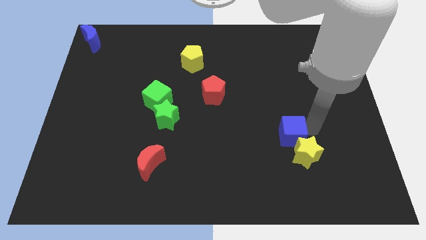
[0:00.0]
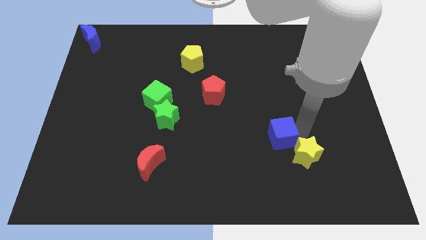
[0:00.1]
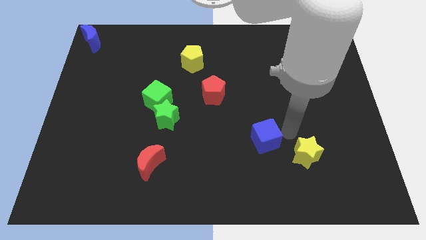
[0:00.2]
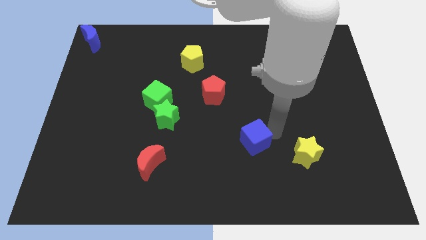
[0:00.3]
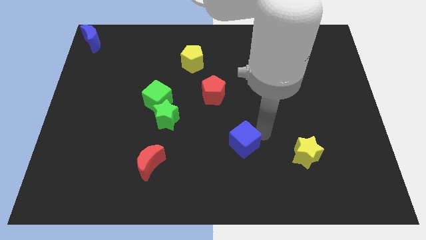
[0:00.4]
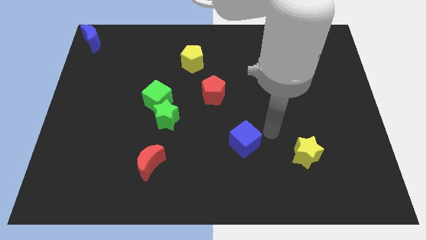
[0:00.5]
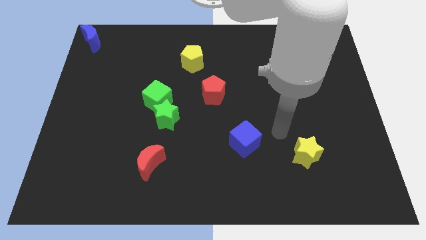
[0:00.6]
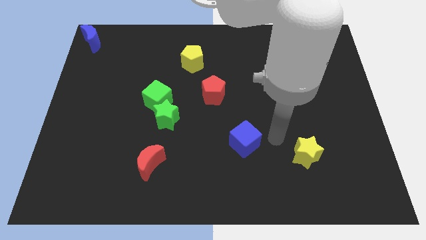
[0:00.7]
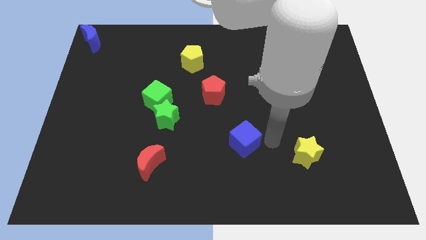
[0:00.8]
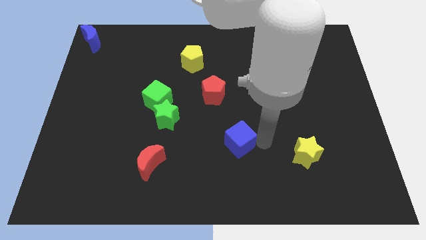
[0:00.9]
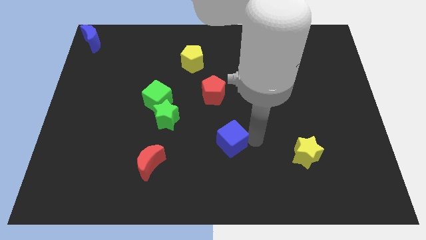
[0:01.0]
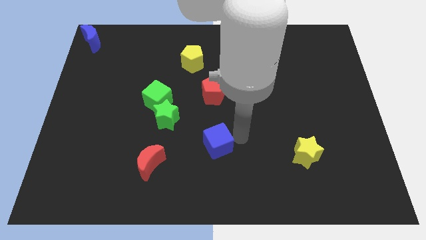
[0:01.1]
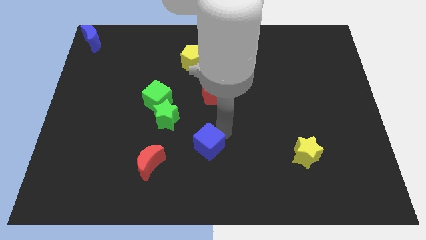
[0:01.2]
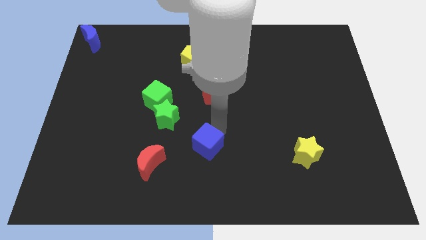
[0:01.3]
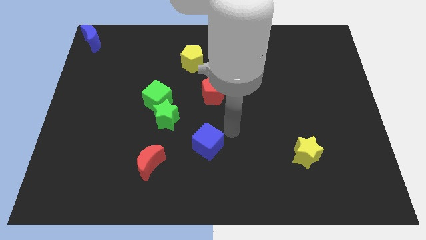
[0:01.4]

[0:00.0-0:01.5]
separate the blue cube from the yellow star

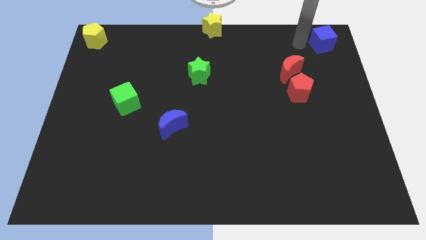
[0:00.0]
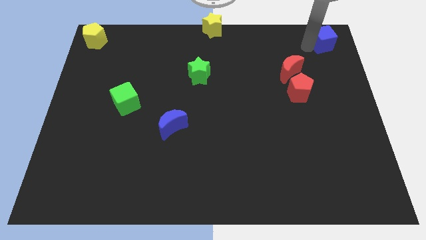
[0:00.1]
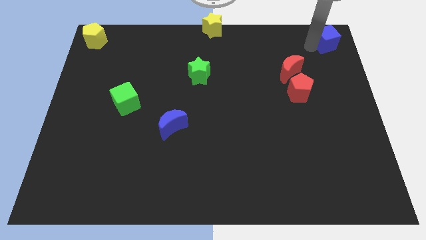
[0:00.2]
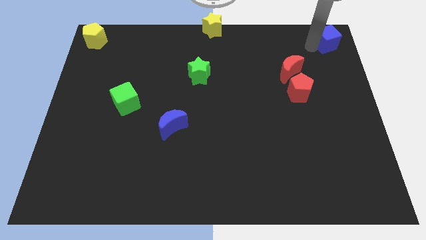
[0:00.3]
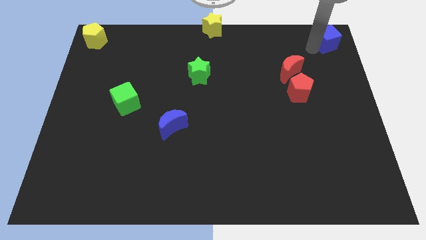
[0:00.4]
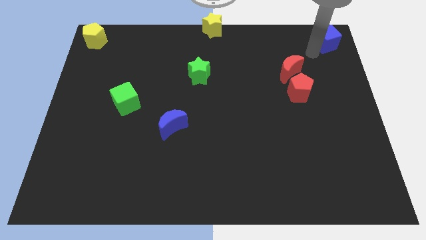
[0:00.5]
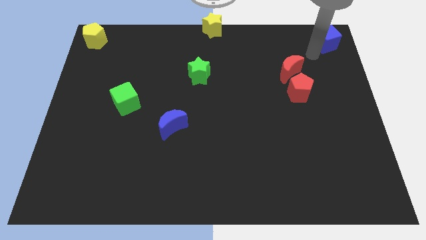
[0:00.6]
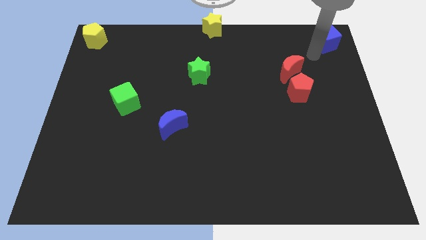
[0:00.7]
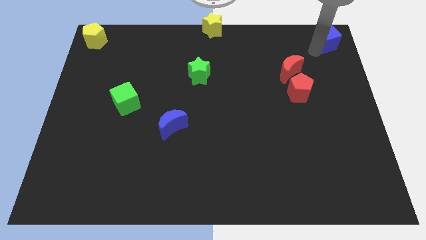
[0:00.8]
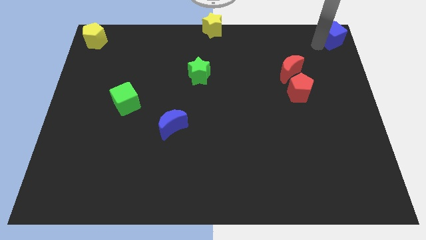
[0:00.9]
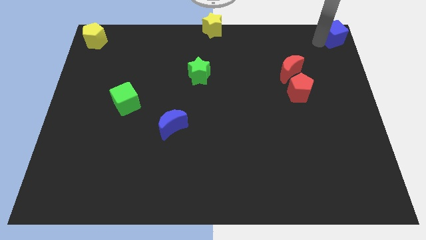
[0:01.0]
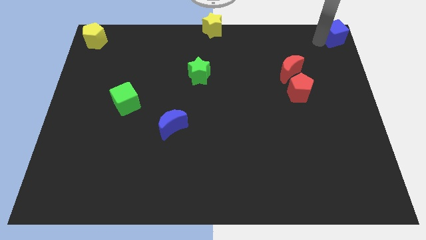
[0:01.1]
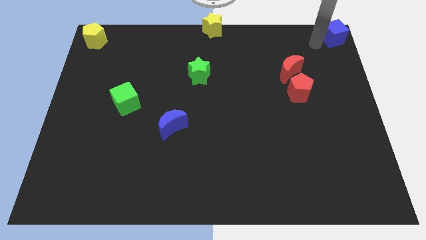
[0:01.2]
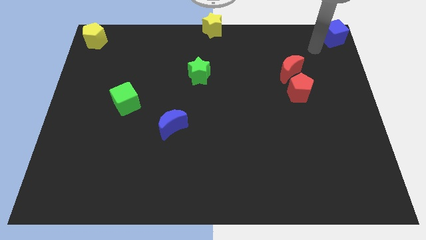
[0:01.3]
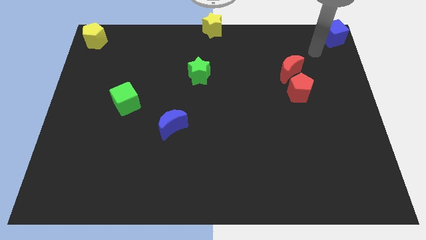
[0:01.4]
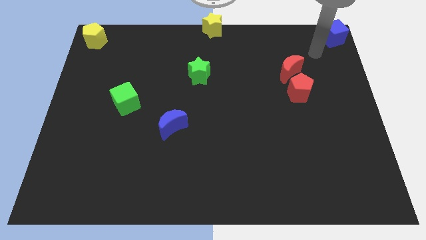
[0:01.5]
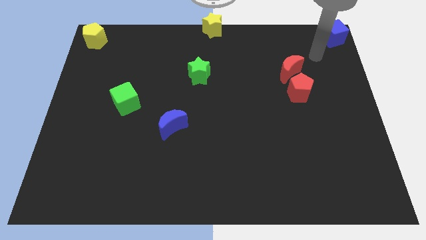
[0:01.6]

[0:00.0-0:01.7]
move the blue cube to the top right of the board

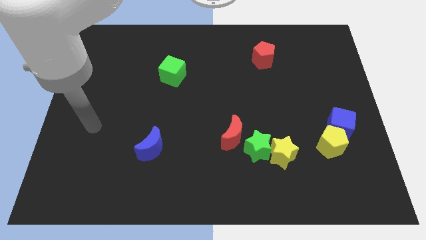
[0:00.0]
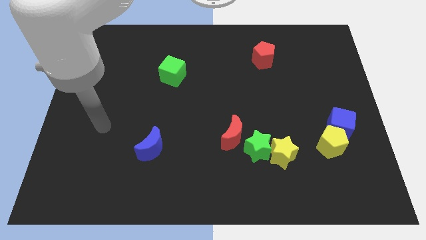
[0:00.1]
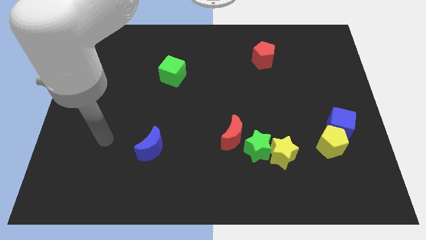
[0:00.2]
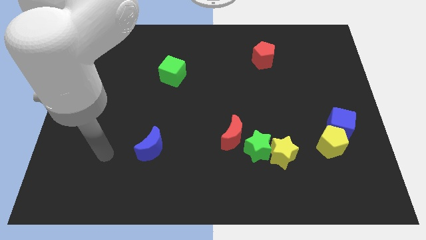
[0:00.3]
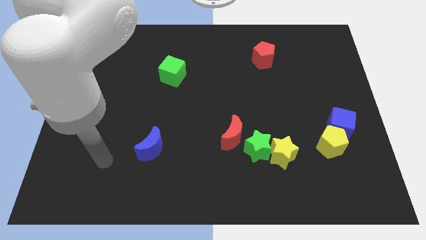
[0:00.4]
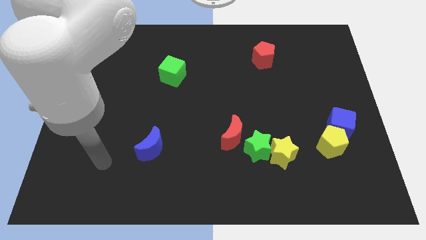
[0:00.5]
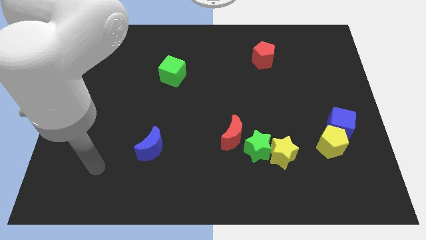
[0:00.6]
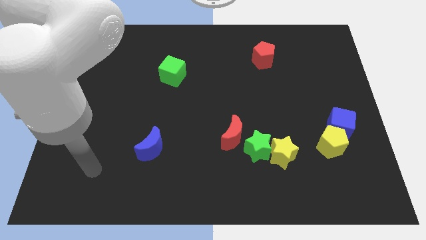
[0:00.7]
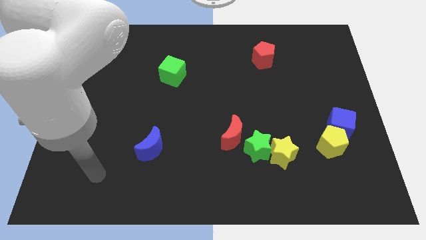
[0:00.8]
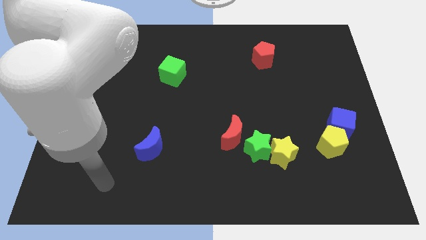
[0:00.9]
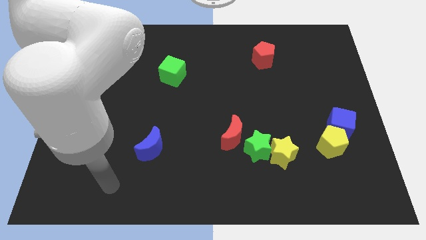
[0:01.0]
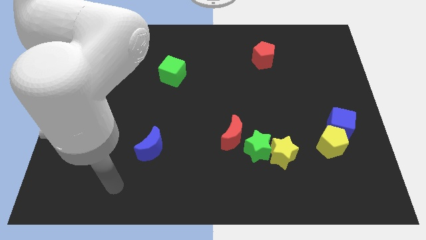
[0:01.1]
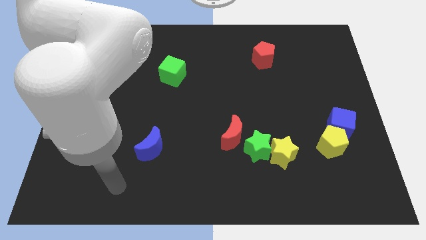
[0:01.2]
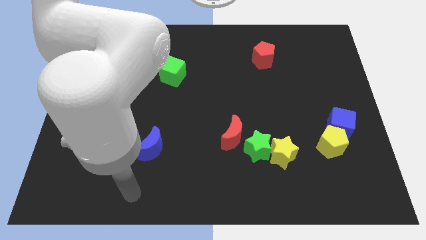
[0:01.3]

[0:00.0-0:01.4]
point your arm at the bottom of the blue crescent

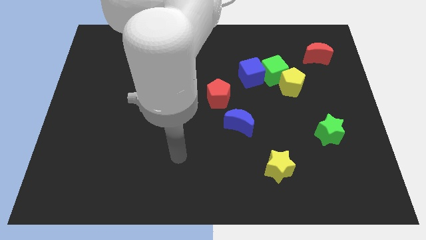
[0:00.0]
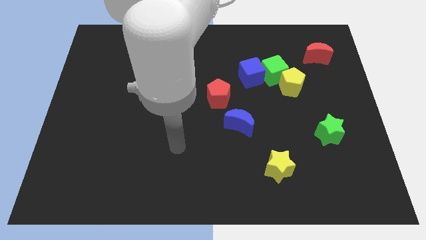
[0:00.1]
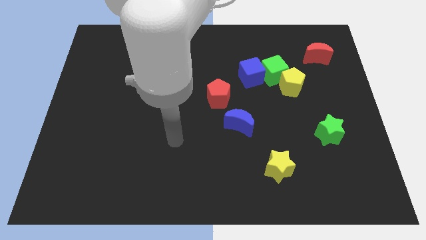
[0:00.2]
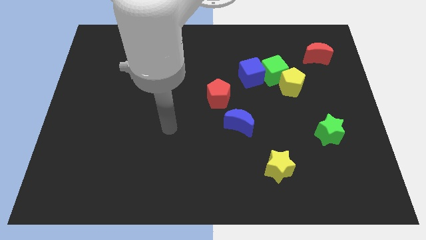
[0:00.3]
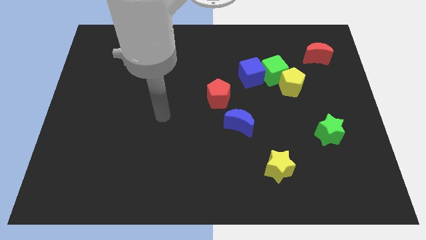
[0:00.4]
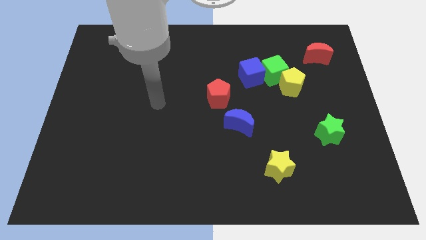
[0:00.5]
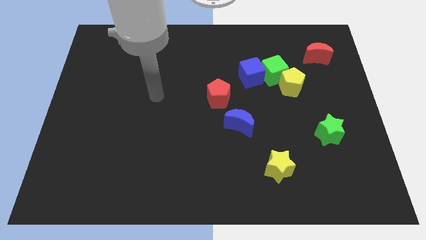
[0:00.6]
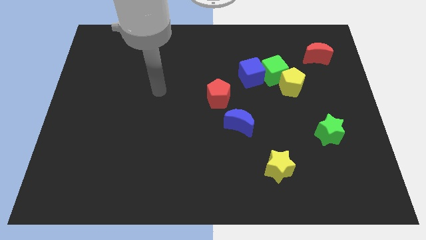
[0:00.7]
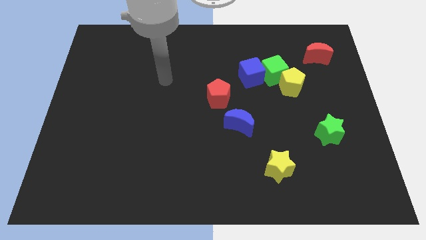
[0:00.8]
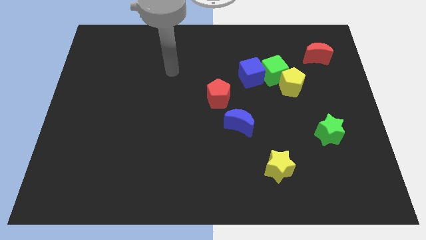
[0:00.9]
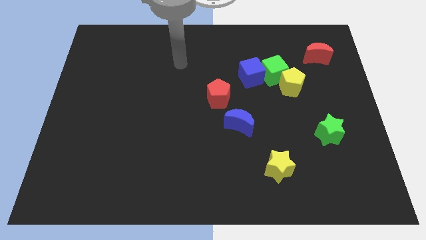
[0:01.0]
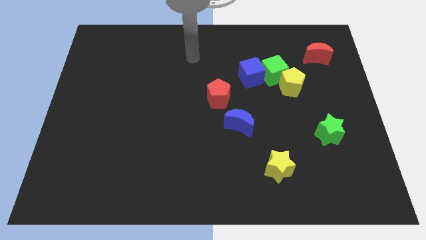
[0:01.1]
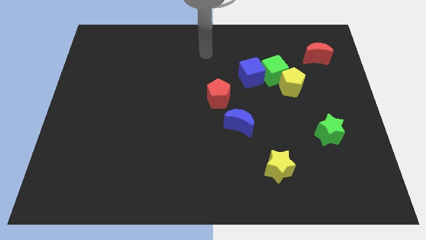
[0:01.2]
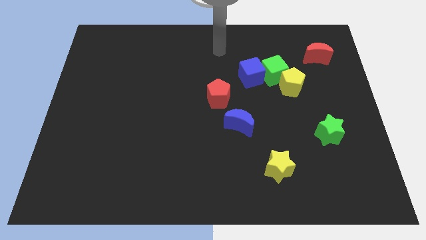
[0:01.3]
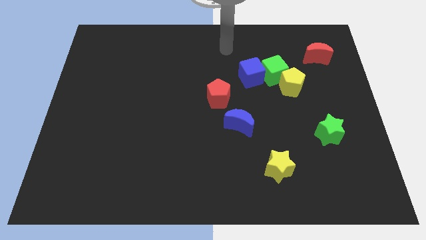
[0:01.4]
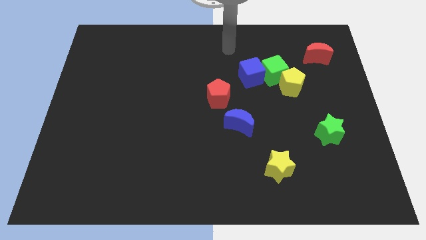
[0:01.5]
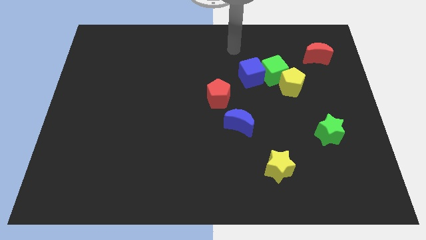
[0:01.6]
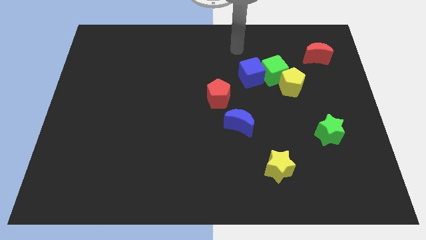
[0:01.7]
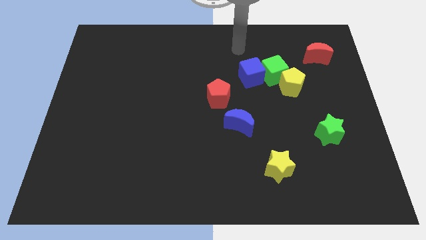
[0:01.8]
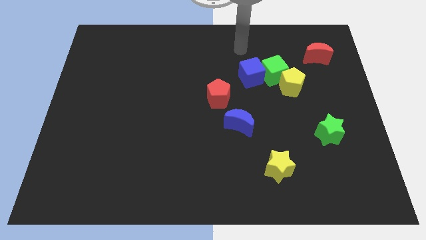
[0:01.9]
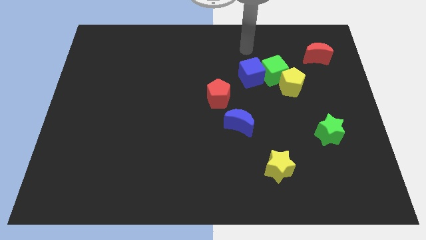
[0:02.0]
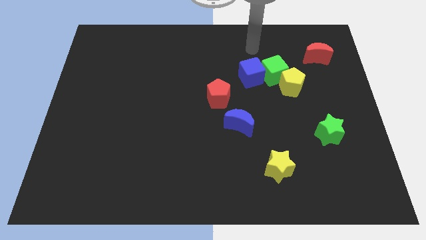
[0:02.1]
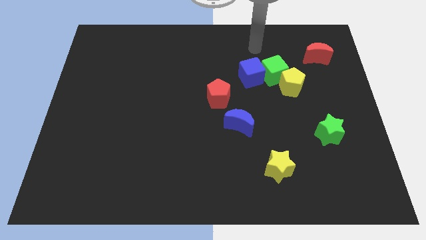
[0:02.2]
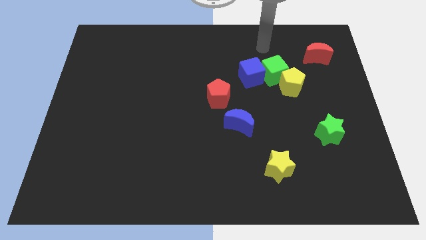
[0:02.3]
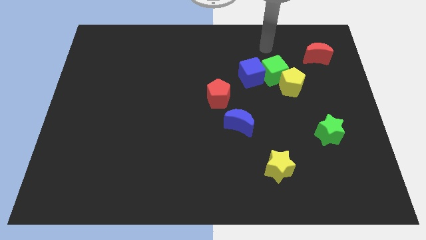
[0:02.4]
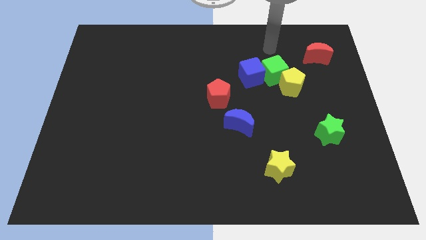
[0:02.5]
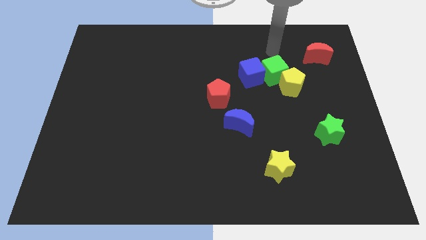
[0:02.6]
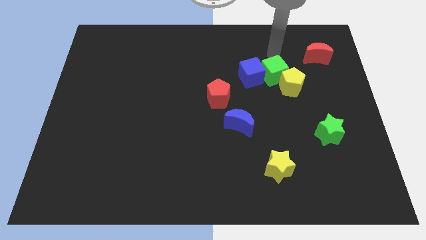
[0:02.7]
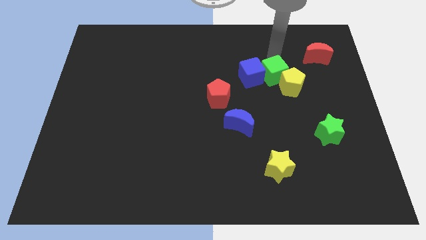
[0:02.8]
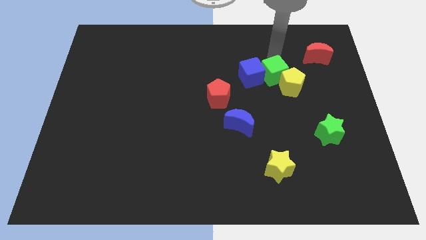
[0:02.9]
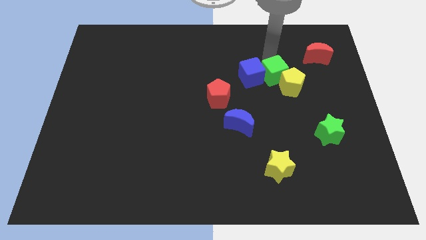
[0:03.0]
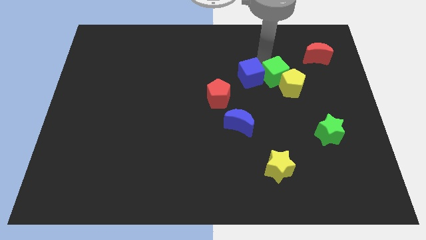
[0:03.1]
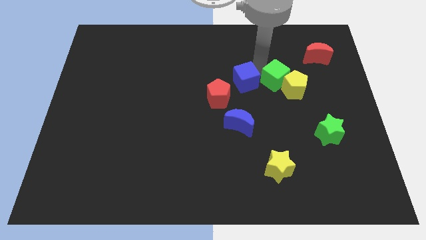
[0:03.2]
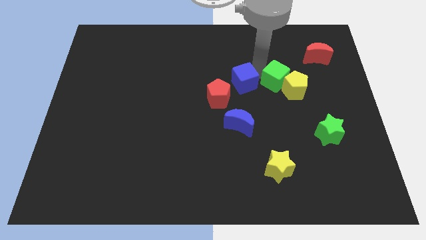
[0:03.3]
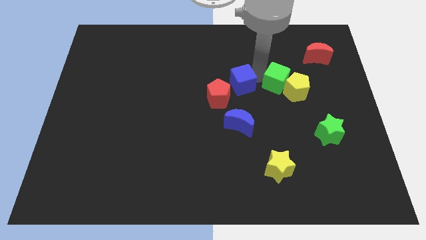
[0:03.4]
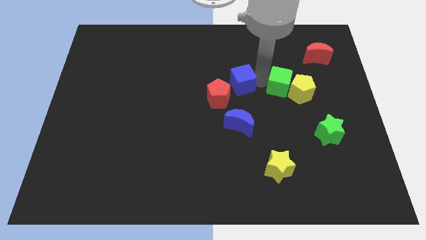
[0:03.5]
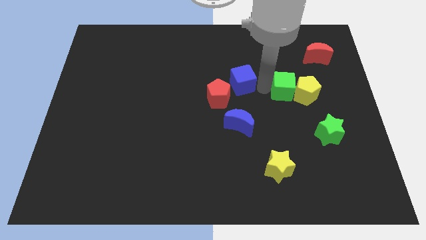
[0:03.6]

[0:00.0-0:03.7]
separate the green cube from the blue cube

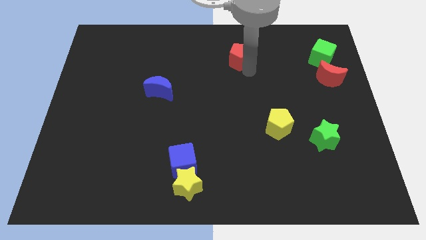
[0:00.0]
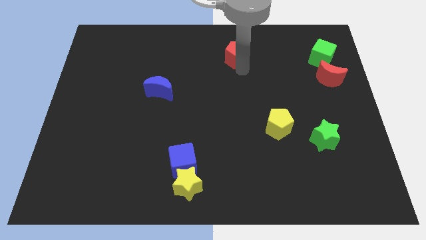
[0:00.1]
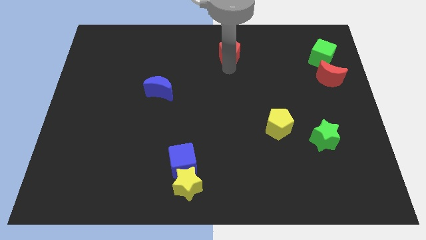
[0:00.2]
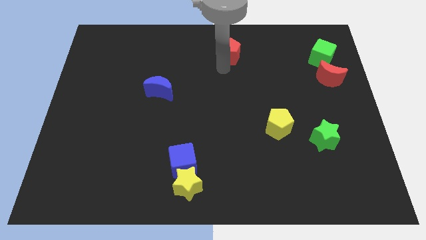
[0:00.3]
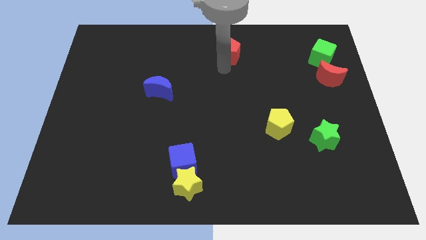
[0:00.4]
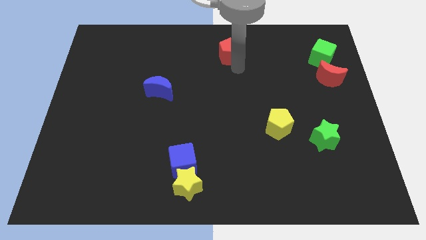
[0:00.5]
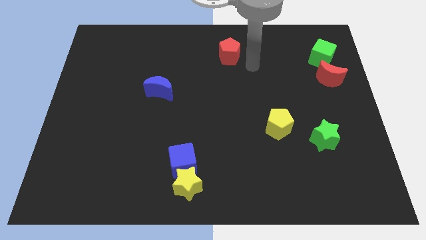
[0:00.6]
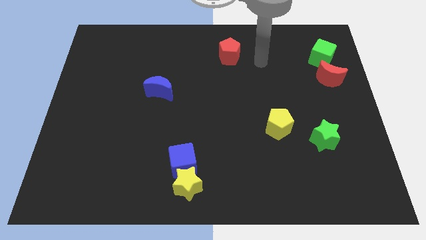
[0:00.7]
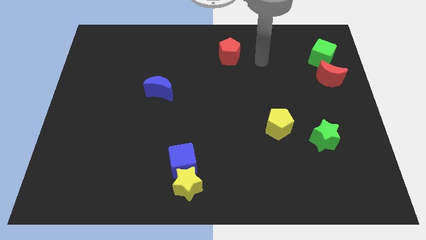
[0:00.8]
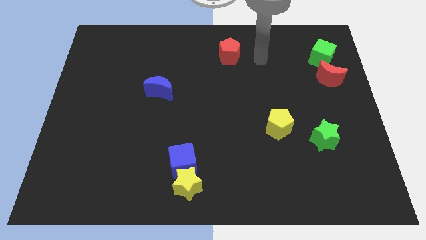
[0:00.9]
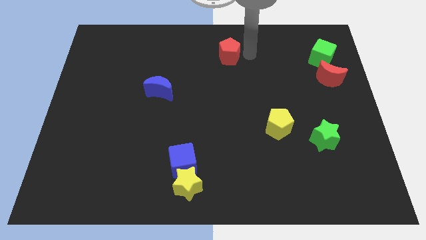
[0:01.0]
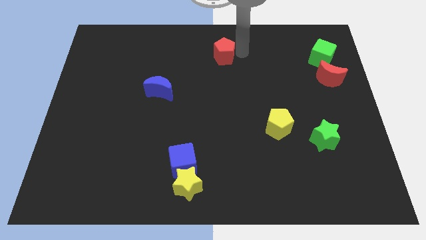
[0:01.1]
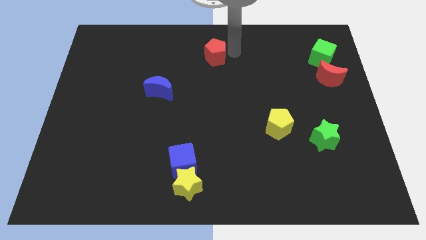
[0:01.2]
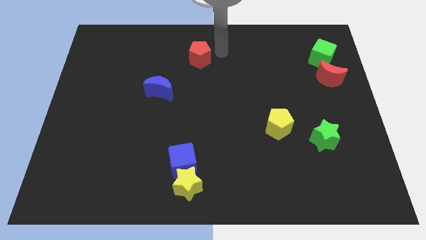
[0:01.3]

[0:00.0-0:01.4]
push the red pentagon to the top center of the board
